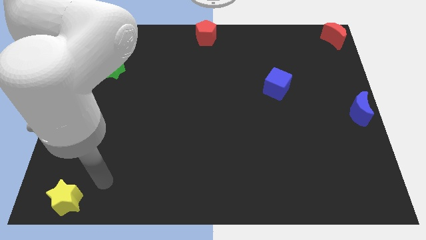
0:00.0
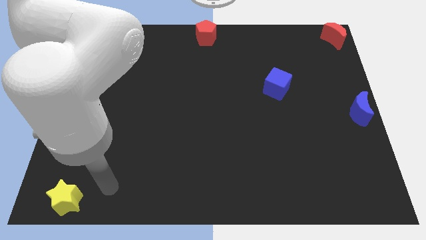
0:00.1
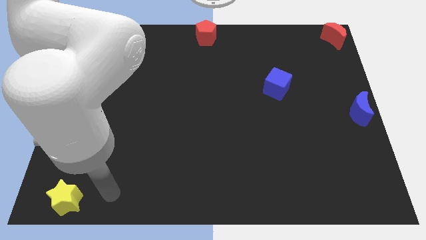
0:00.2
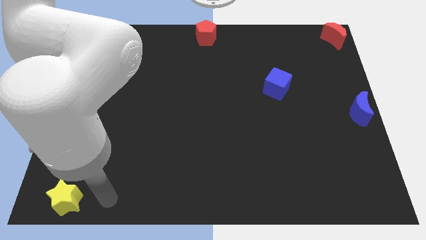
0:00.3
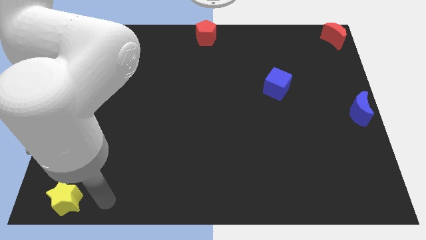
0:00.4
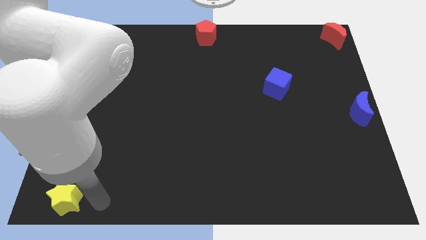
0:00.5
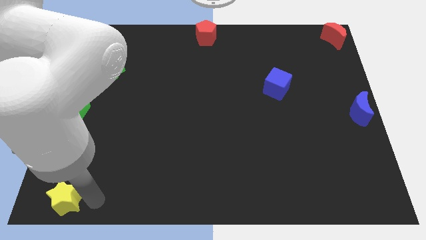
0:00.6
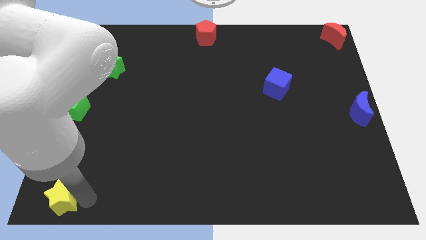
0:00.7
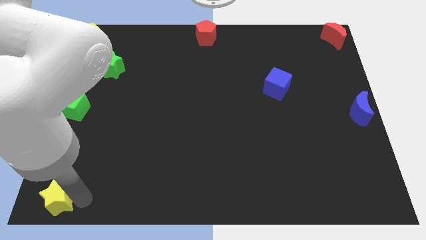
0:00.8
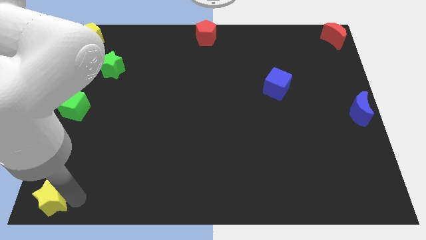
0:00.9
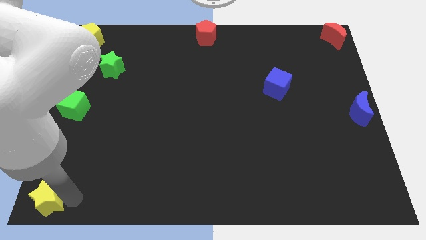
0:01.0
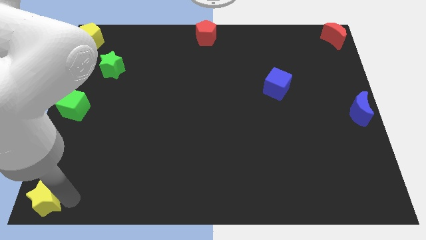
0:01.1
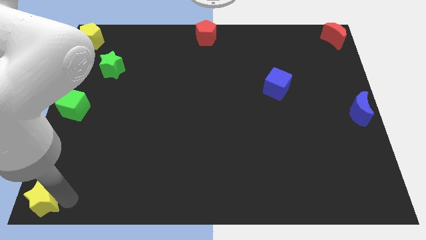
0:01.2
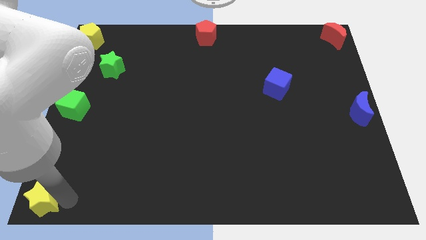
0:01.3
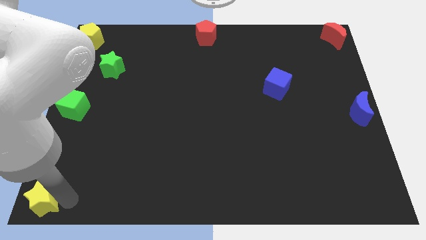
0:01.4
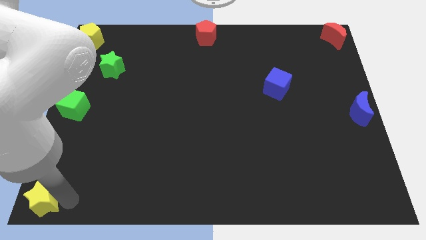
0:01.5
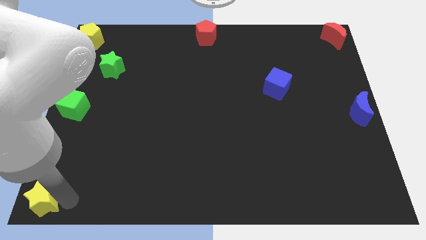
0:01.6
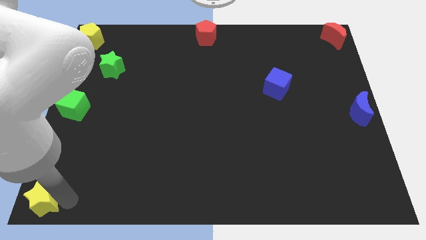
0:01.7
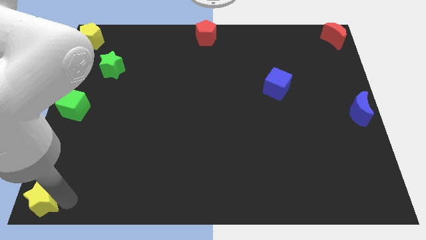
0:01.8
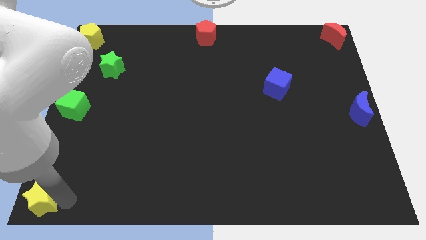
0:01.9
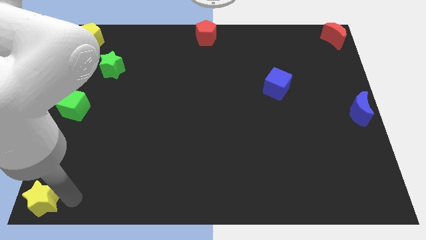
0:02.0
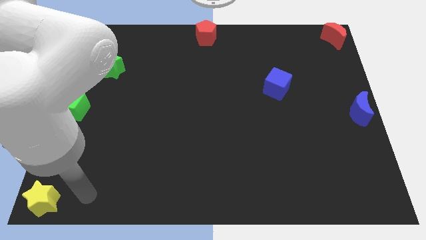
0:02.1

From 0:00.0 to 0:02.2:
move the yellow star to the bottom left of the board

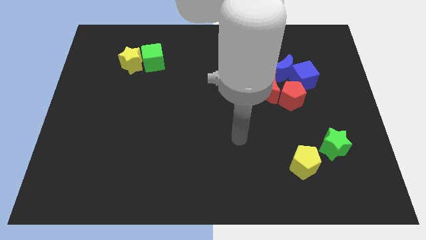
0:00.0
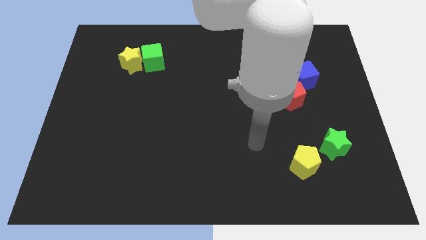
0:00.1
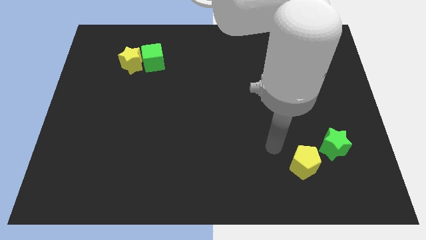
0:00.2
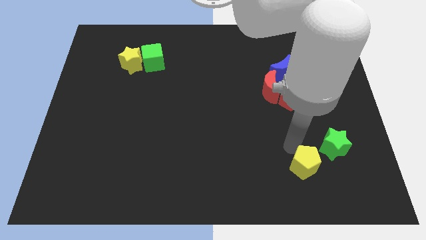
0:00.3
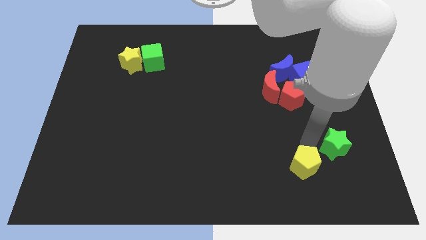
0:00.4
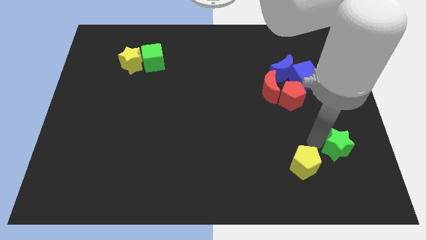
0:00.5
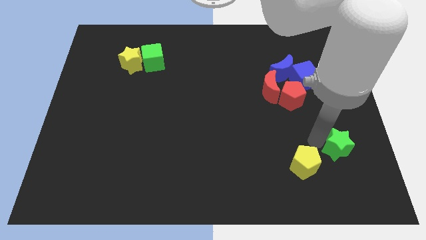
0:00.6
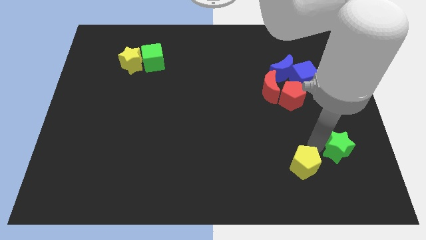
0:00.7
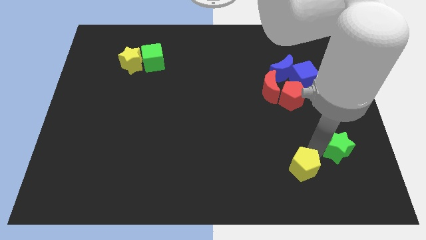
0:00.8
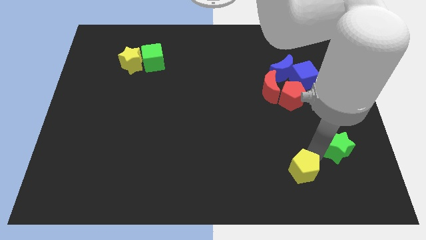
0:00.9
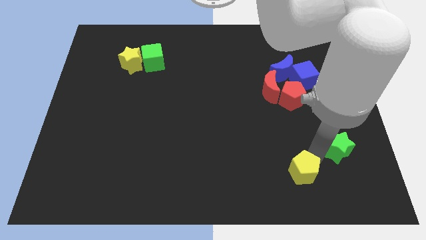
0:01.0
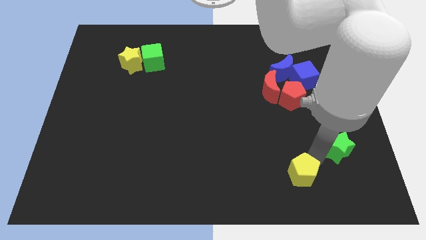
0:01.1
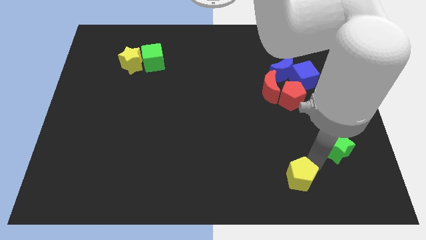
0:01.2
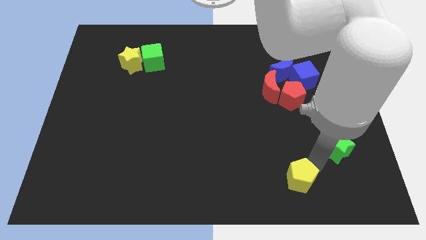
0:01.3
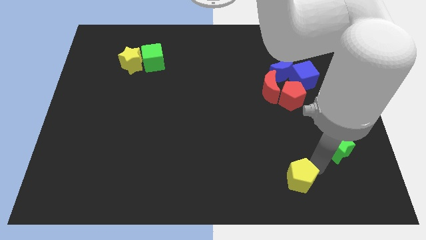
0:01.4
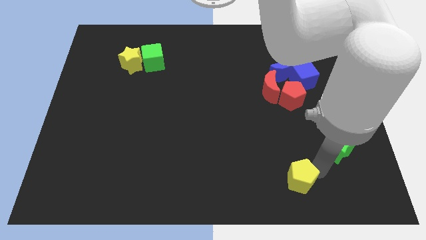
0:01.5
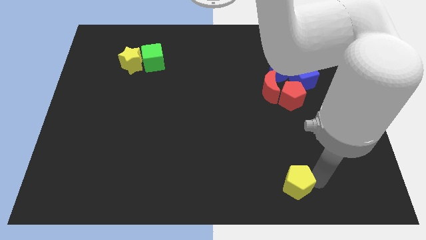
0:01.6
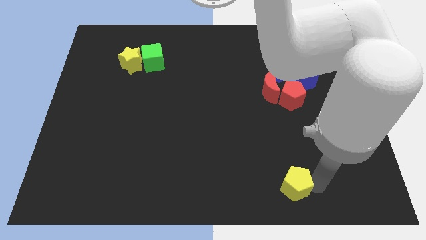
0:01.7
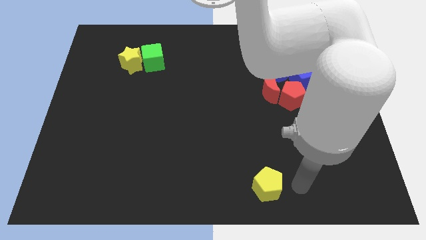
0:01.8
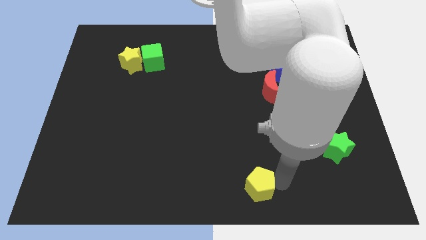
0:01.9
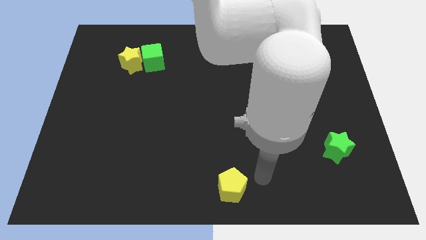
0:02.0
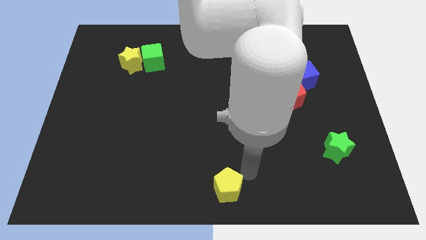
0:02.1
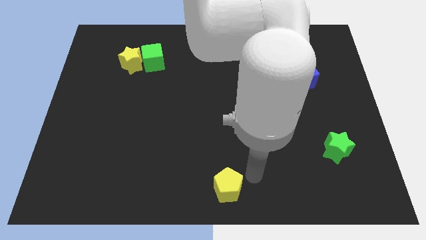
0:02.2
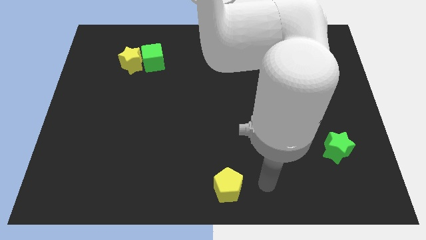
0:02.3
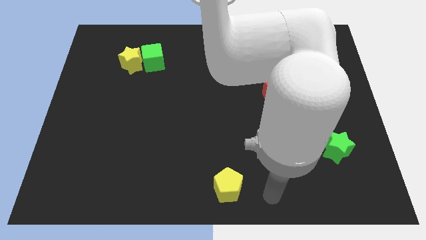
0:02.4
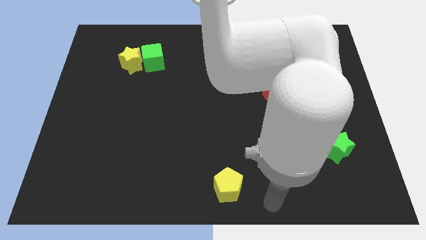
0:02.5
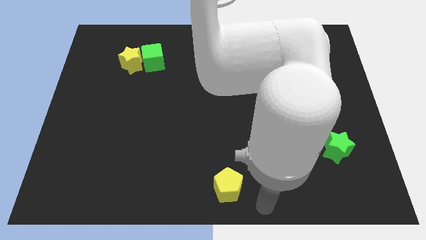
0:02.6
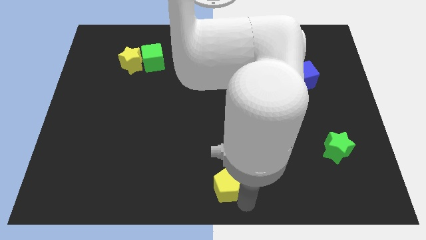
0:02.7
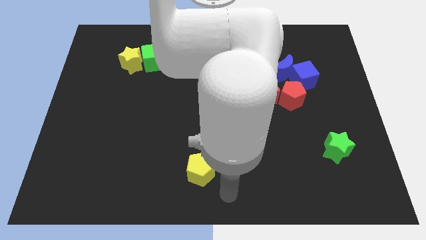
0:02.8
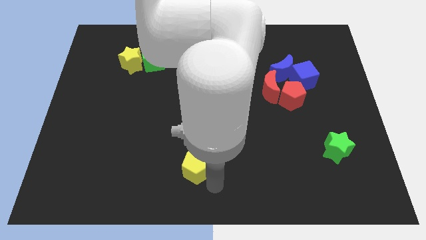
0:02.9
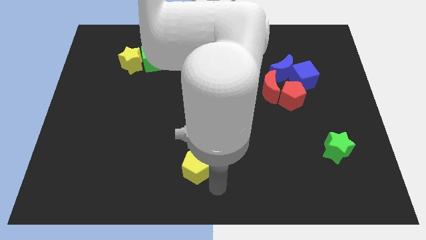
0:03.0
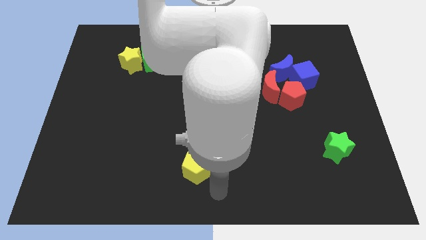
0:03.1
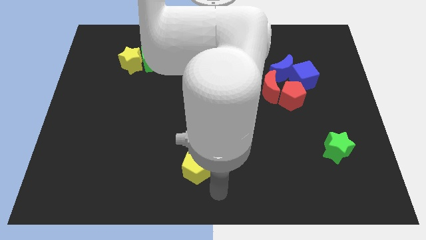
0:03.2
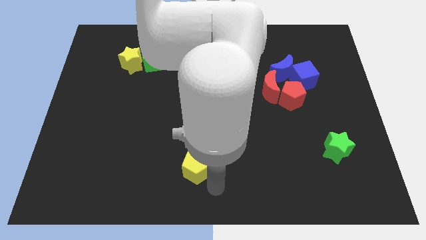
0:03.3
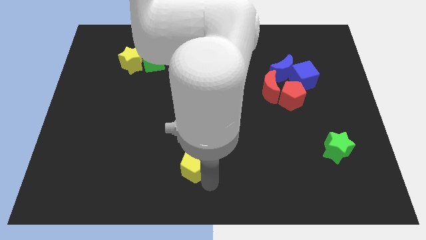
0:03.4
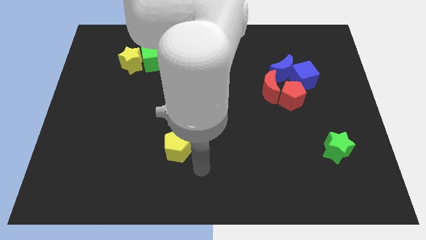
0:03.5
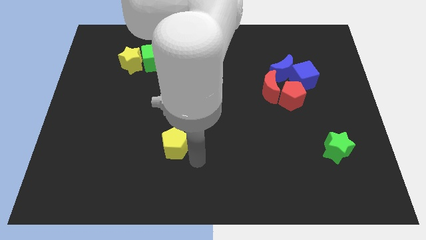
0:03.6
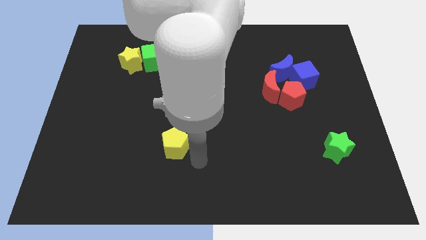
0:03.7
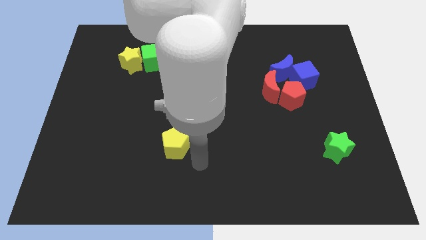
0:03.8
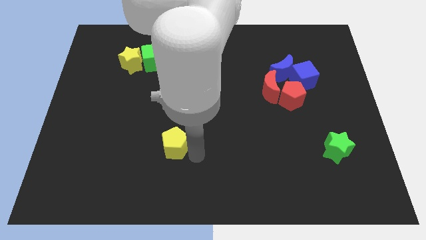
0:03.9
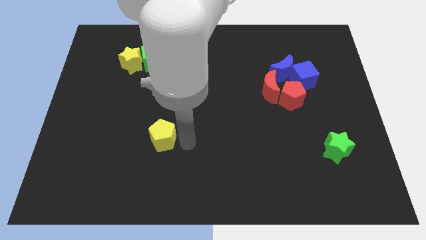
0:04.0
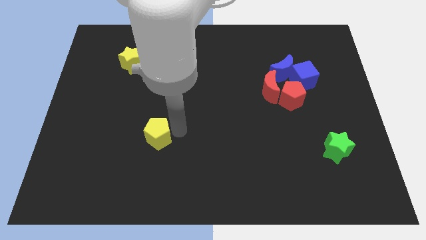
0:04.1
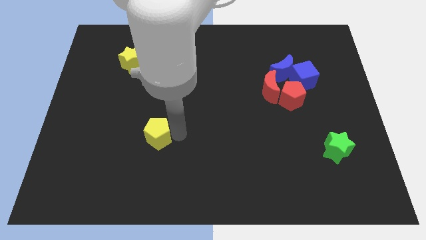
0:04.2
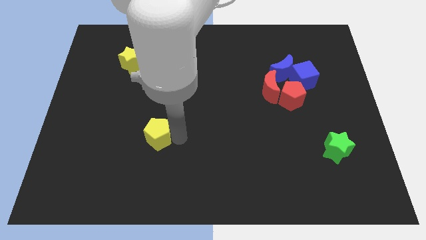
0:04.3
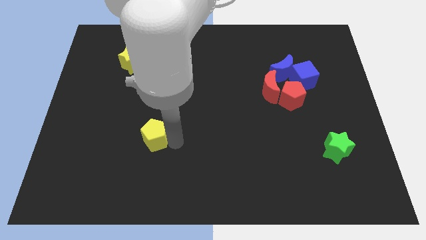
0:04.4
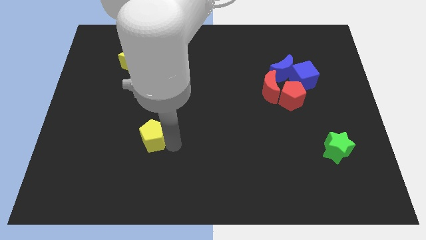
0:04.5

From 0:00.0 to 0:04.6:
move the yellow pentagon away from the left side of the green star

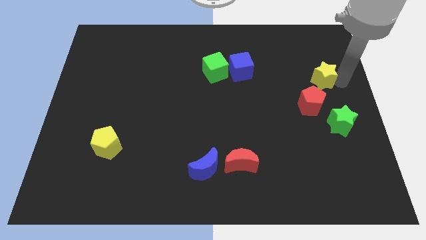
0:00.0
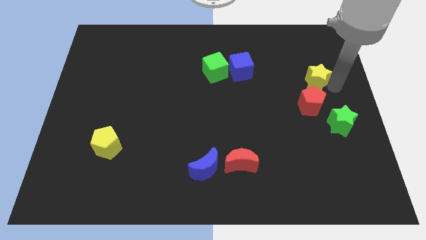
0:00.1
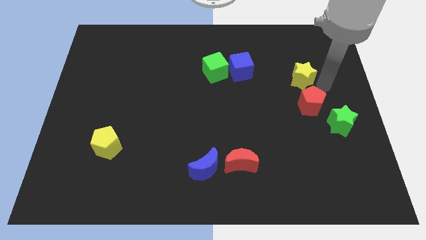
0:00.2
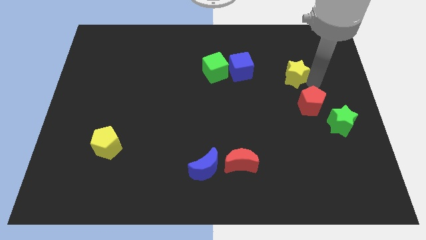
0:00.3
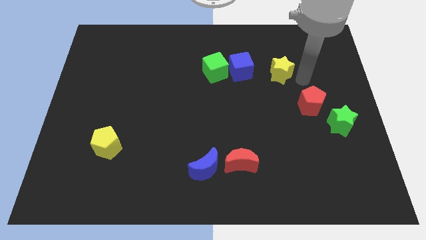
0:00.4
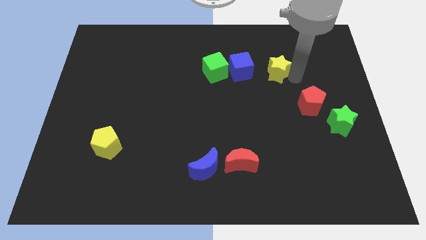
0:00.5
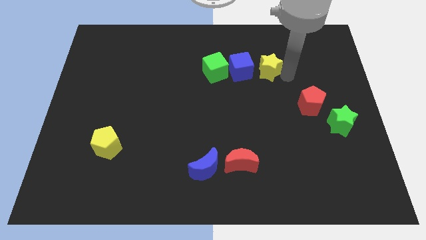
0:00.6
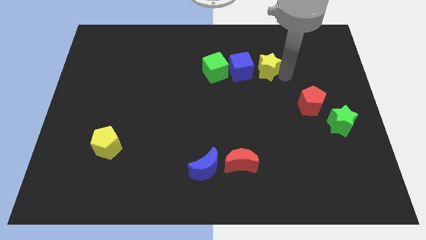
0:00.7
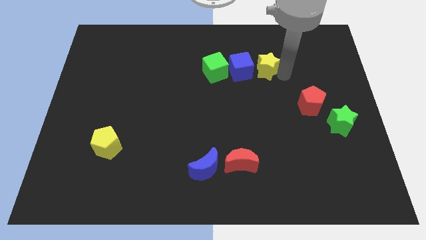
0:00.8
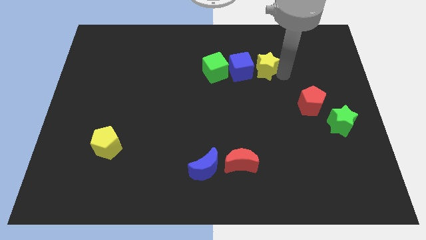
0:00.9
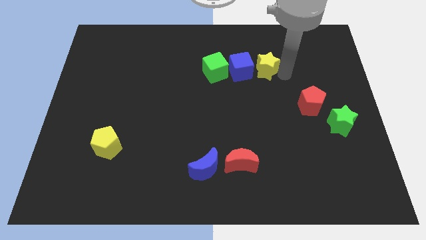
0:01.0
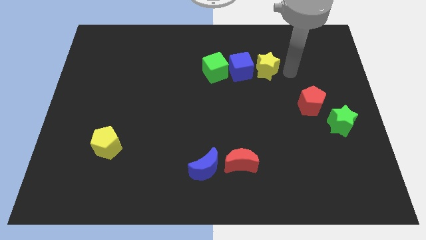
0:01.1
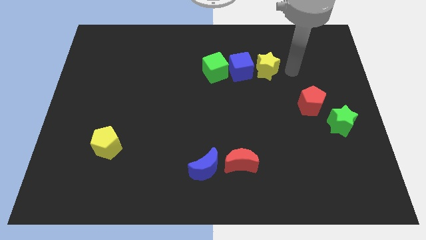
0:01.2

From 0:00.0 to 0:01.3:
bring the yellow star at the right side of the blue cube

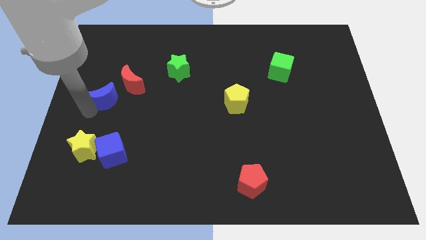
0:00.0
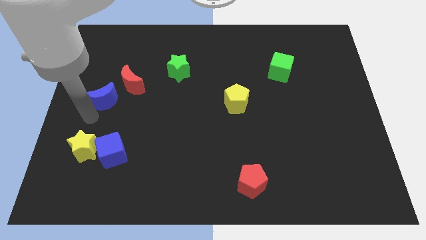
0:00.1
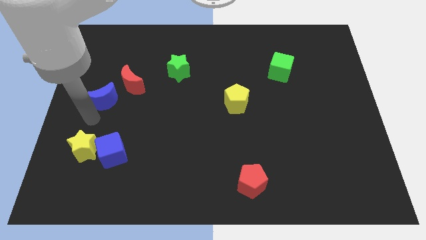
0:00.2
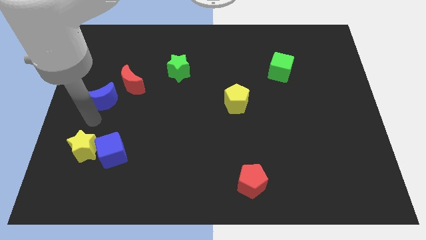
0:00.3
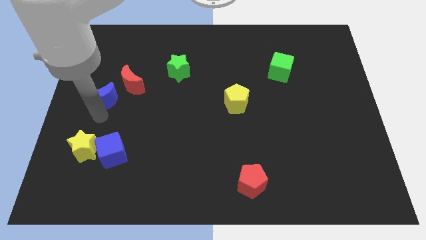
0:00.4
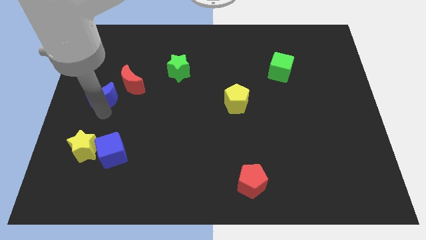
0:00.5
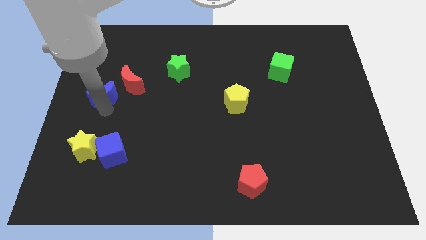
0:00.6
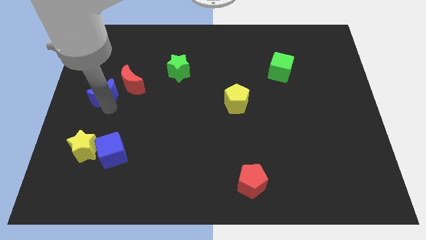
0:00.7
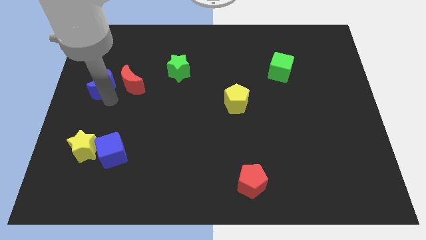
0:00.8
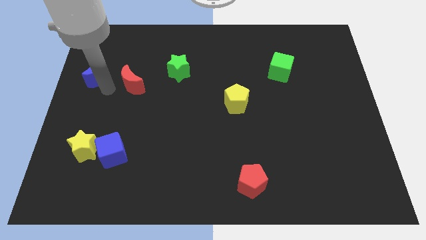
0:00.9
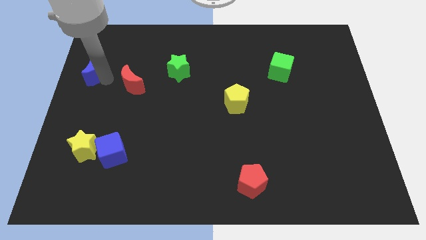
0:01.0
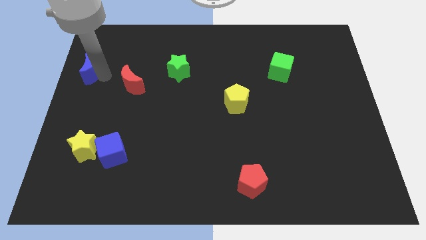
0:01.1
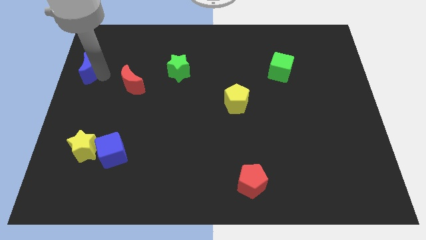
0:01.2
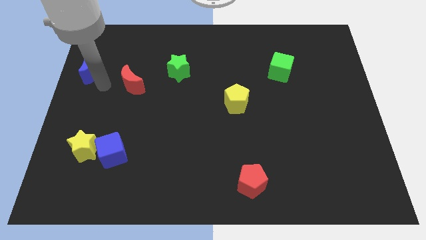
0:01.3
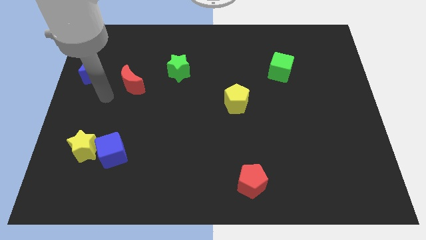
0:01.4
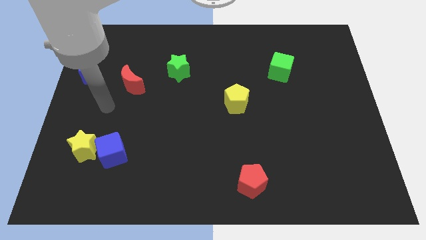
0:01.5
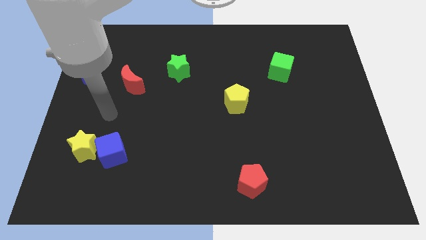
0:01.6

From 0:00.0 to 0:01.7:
move the blue moon diagonally on the top left side of the red moon
